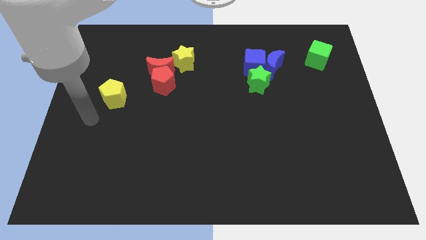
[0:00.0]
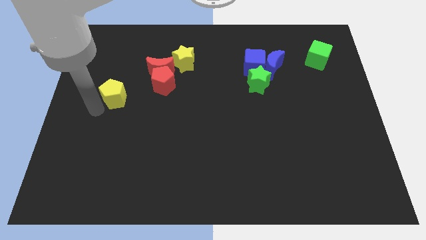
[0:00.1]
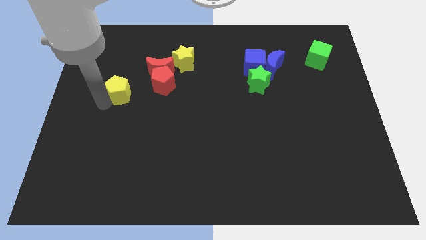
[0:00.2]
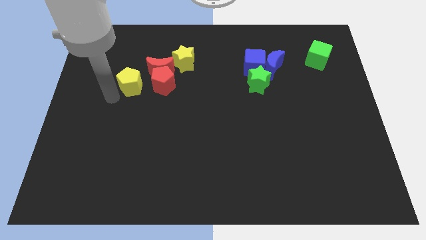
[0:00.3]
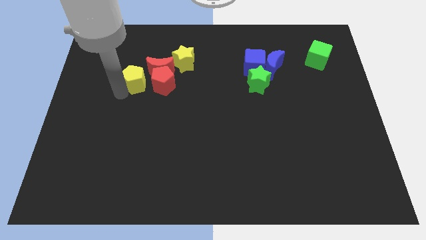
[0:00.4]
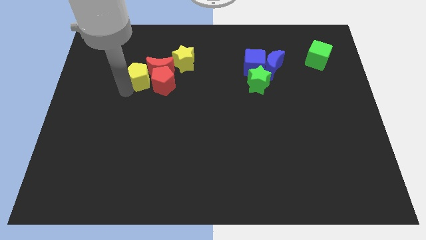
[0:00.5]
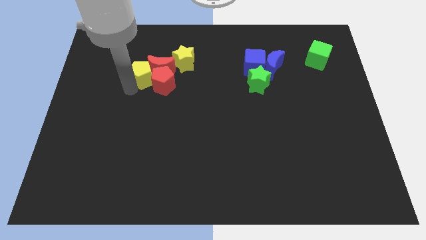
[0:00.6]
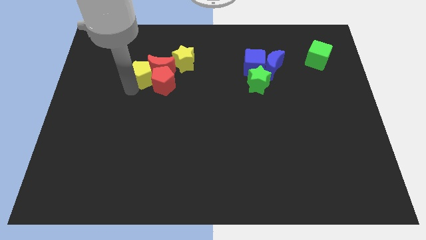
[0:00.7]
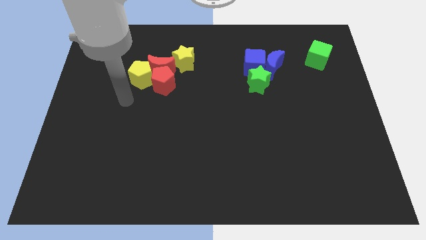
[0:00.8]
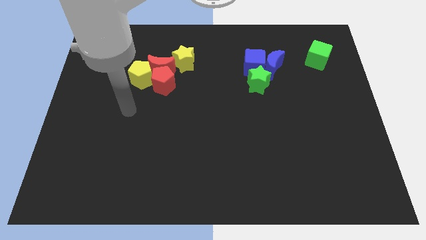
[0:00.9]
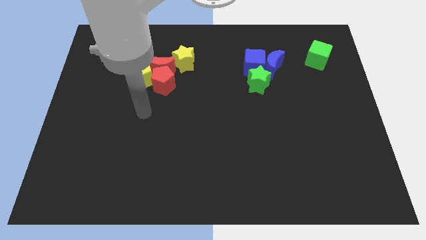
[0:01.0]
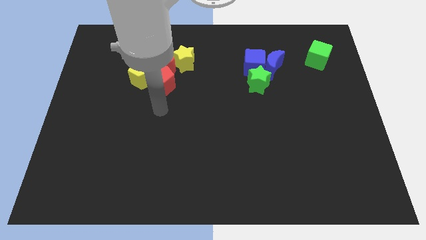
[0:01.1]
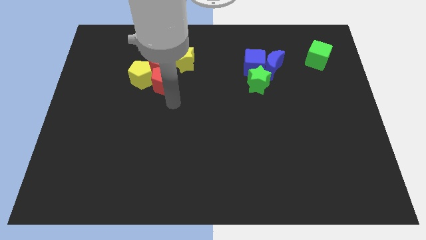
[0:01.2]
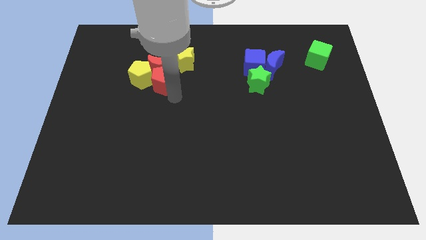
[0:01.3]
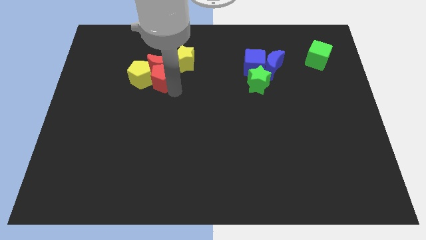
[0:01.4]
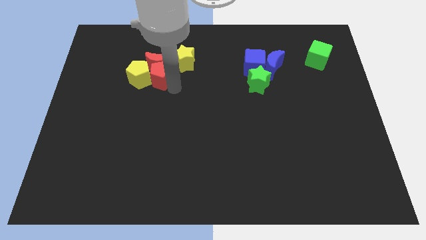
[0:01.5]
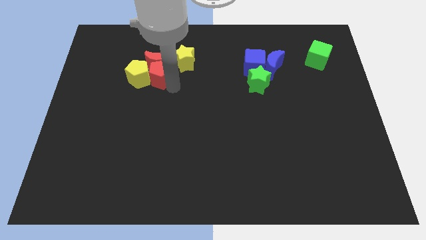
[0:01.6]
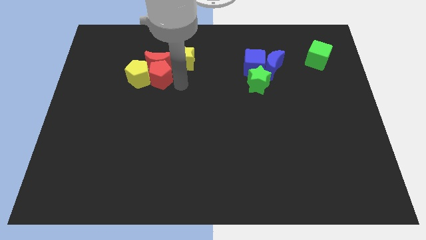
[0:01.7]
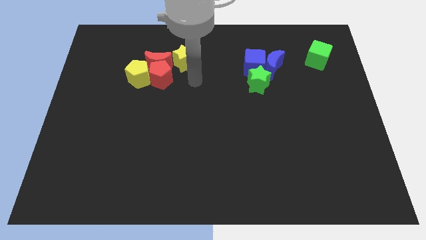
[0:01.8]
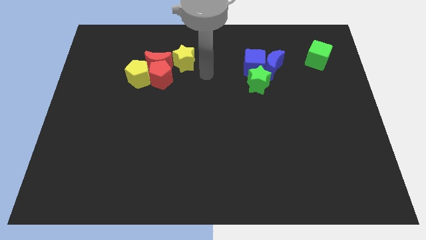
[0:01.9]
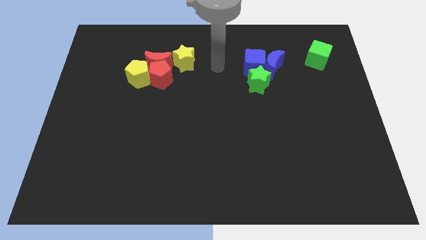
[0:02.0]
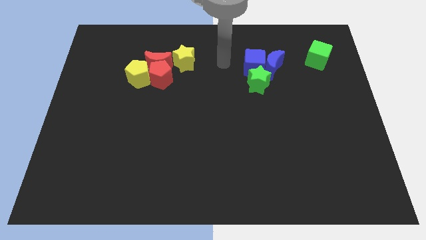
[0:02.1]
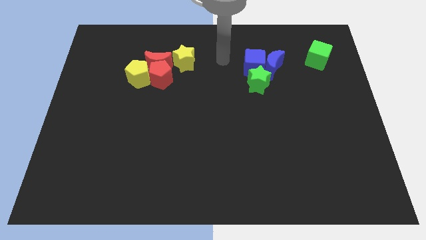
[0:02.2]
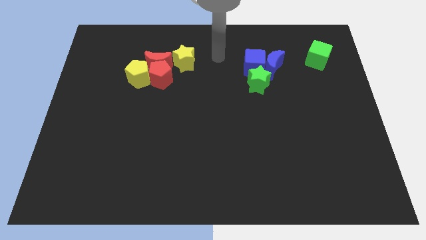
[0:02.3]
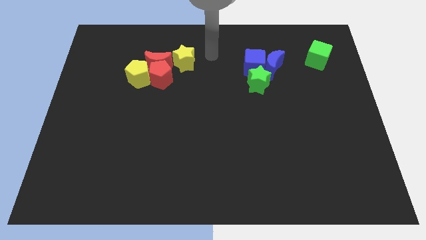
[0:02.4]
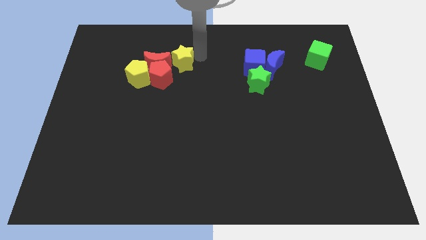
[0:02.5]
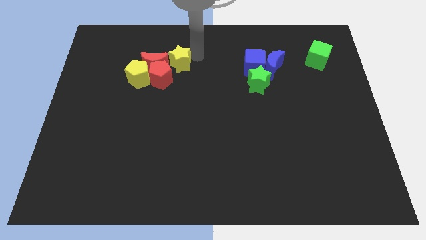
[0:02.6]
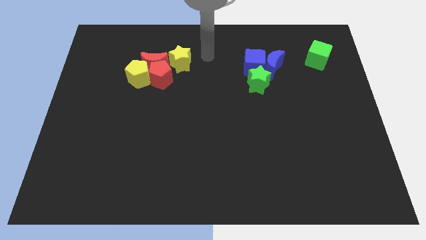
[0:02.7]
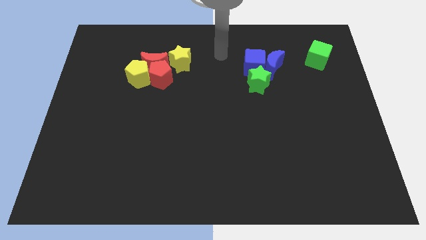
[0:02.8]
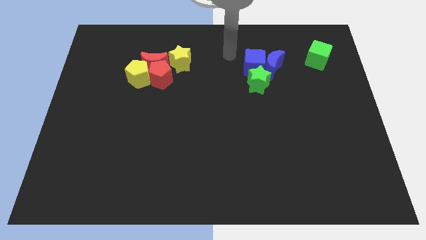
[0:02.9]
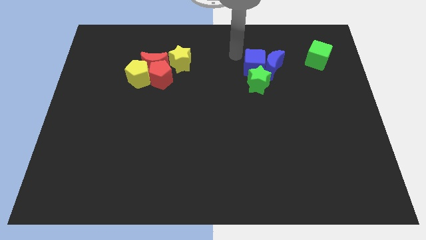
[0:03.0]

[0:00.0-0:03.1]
adjust the red and yellow blocks at the top left of the board

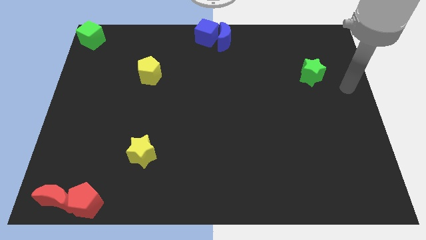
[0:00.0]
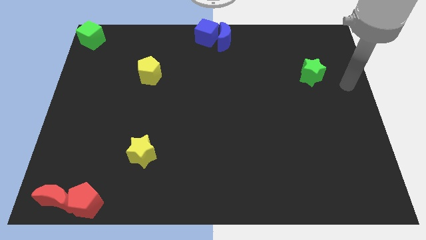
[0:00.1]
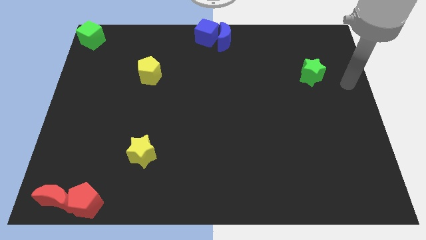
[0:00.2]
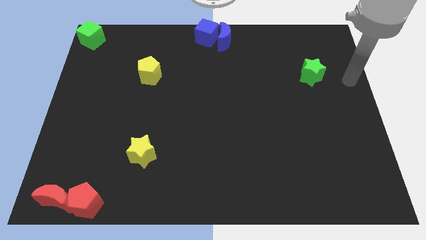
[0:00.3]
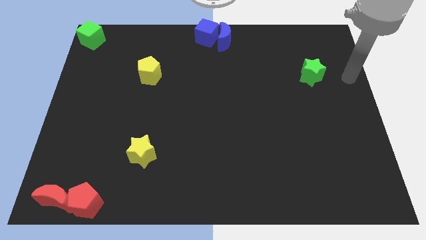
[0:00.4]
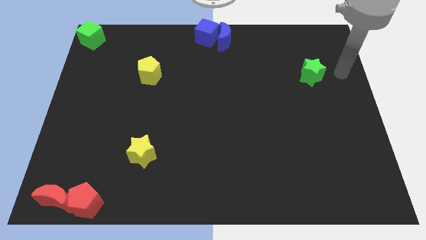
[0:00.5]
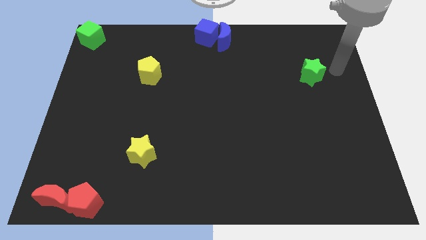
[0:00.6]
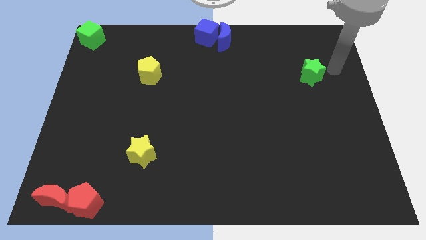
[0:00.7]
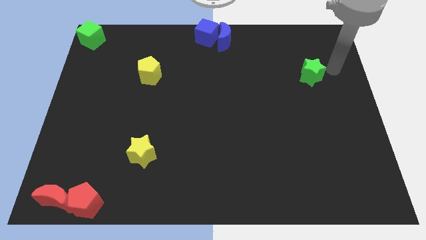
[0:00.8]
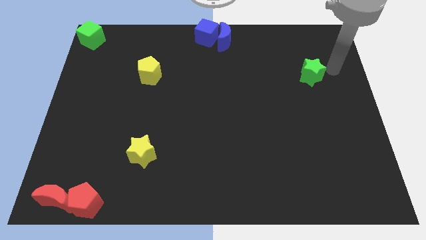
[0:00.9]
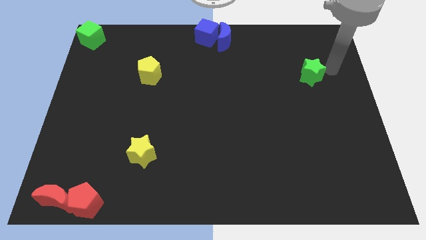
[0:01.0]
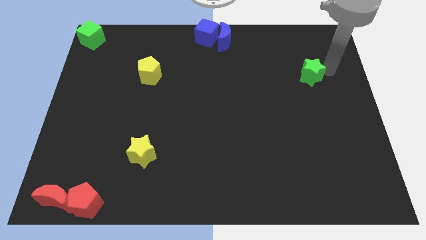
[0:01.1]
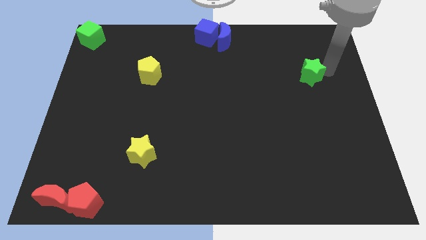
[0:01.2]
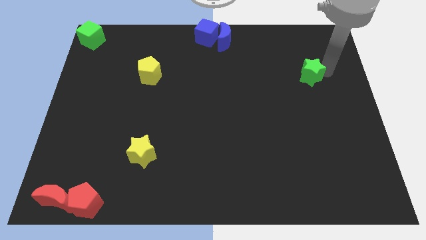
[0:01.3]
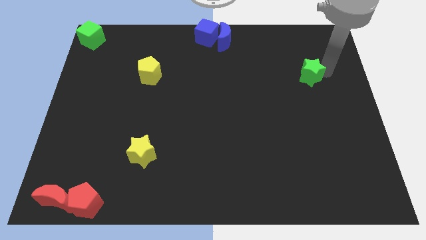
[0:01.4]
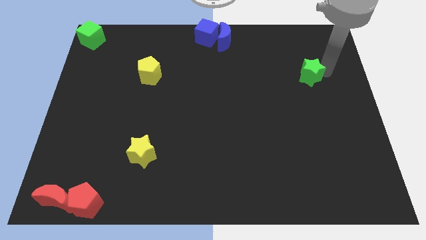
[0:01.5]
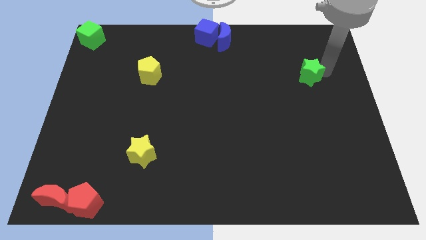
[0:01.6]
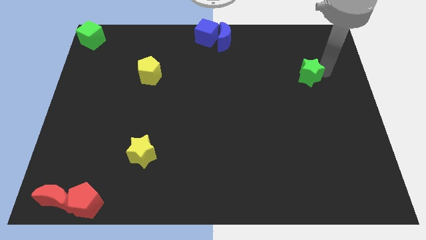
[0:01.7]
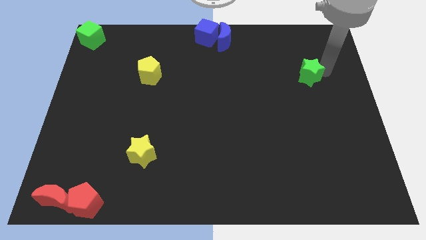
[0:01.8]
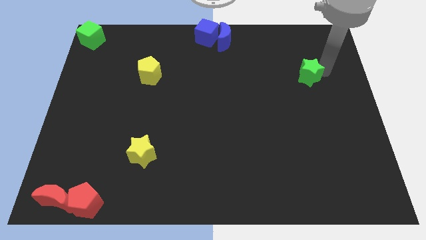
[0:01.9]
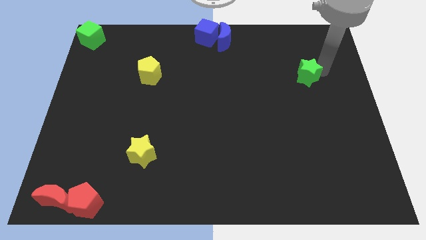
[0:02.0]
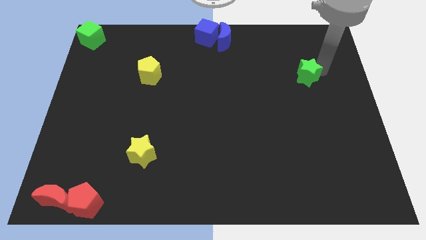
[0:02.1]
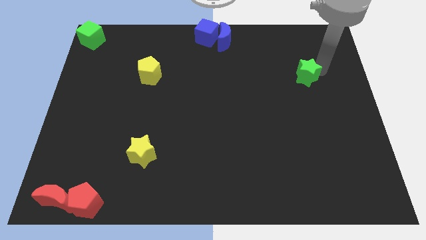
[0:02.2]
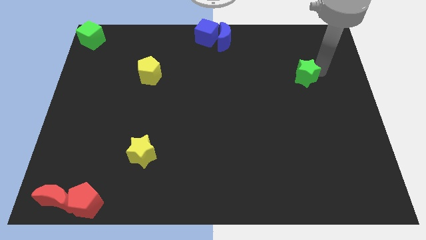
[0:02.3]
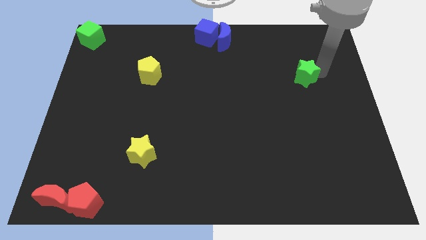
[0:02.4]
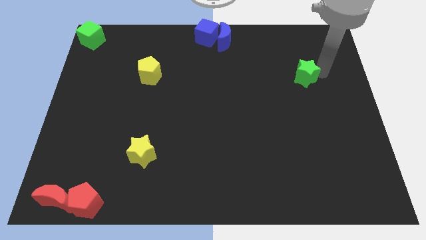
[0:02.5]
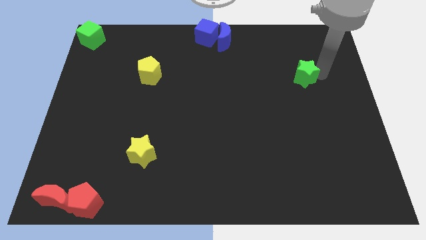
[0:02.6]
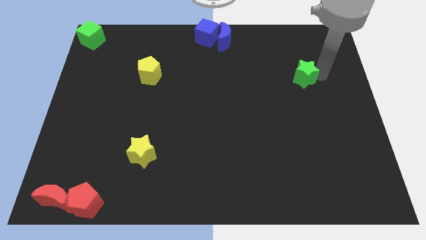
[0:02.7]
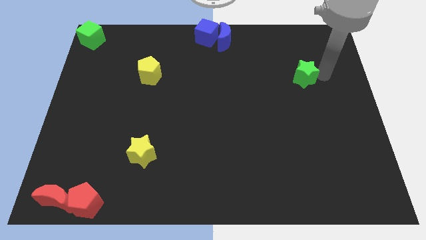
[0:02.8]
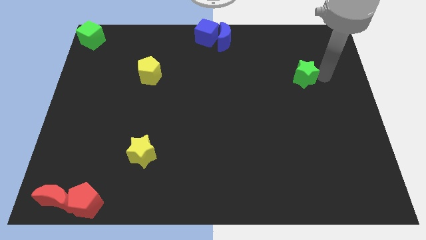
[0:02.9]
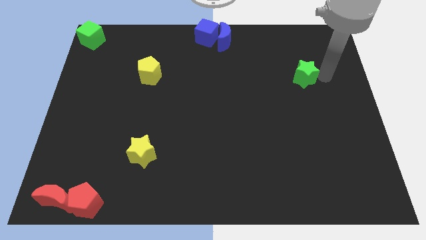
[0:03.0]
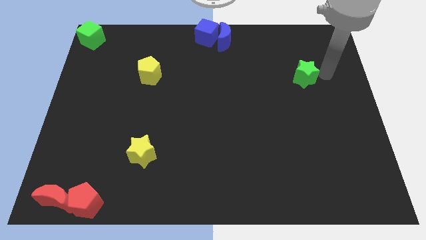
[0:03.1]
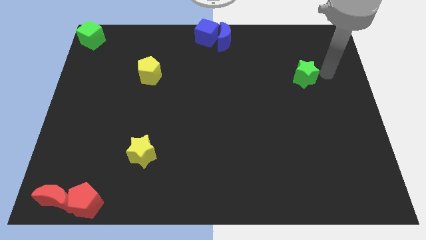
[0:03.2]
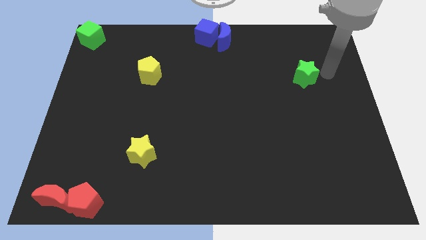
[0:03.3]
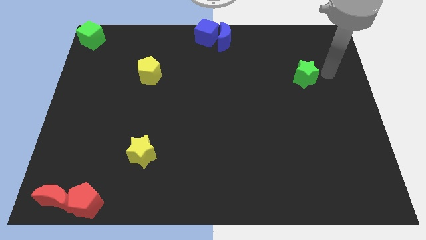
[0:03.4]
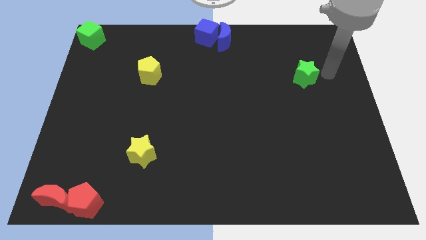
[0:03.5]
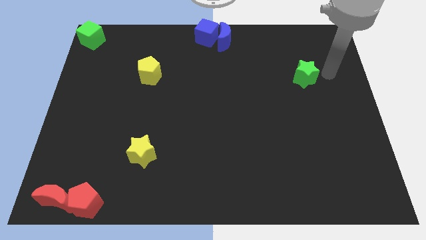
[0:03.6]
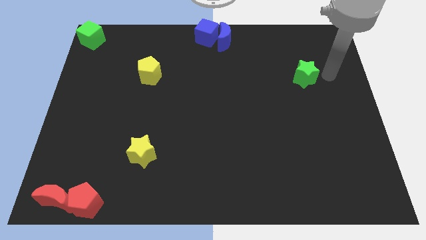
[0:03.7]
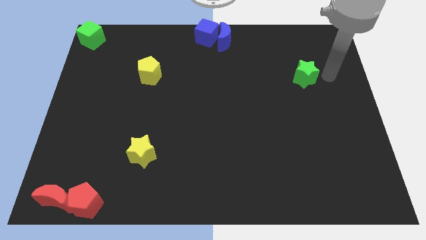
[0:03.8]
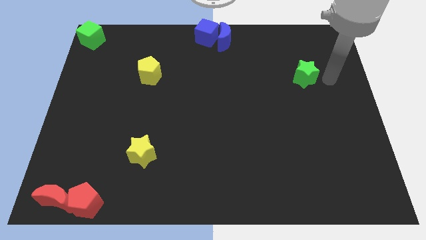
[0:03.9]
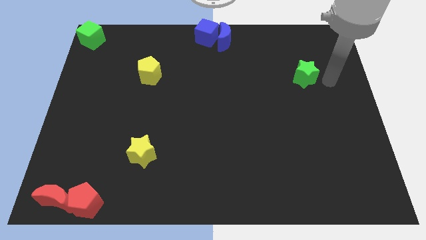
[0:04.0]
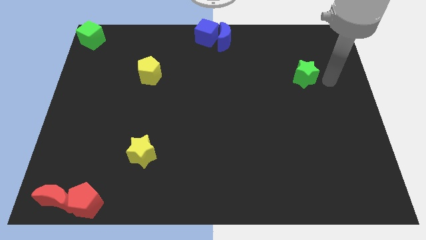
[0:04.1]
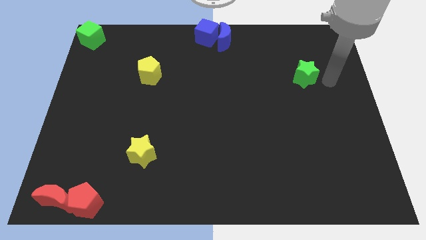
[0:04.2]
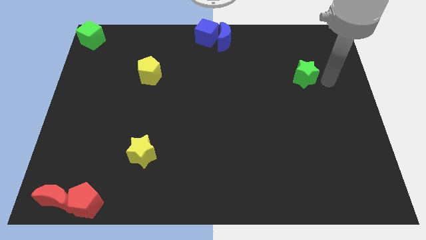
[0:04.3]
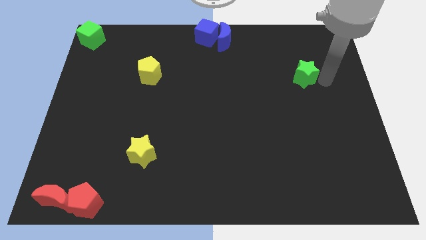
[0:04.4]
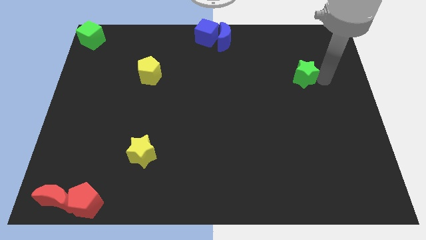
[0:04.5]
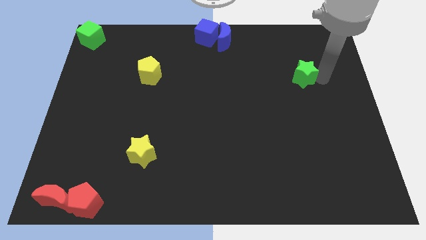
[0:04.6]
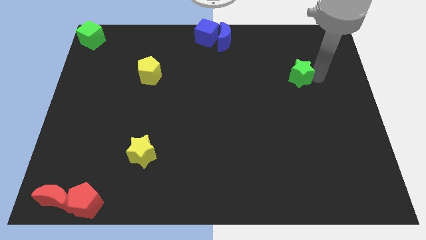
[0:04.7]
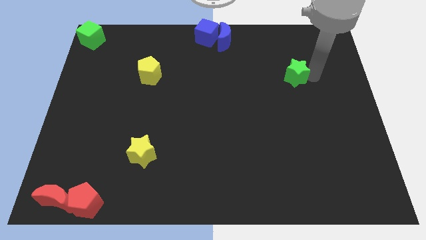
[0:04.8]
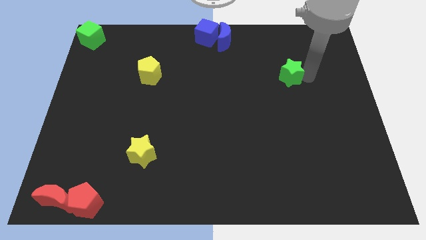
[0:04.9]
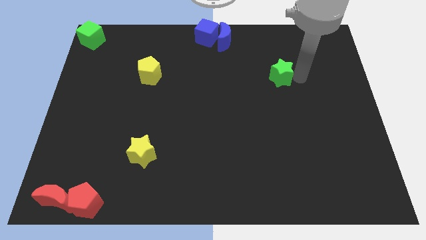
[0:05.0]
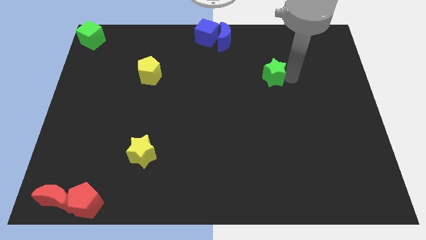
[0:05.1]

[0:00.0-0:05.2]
push green star towards the center of the board

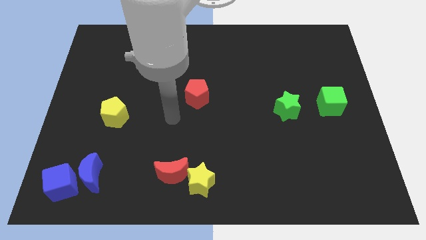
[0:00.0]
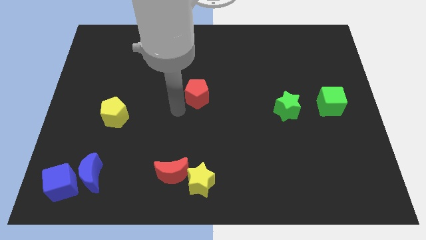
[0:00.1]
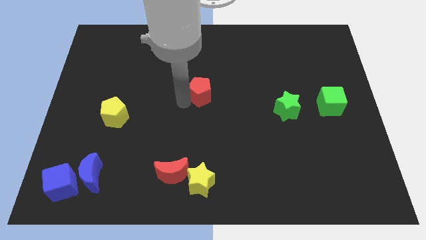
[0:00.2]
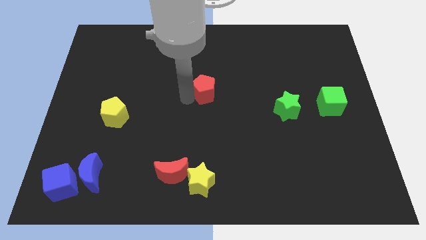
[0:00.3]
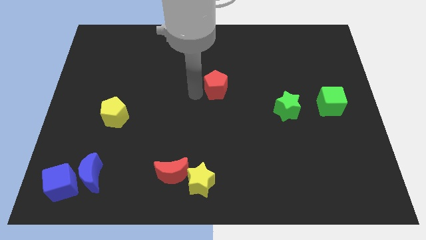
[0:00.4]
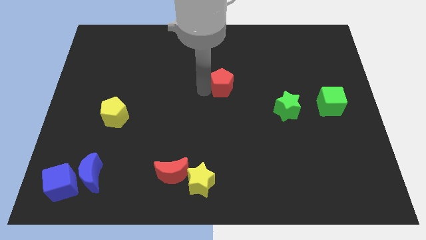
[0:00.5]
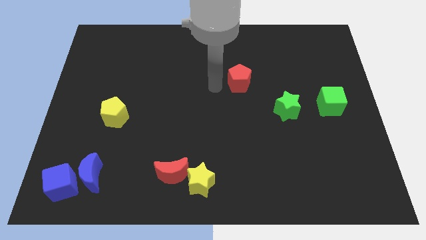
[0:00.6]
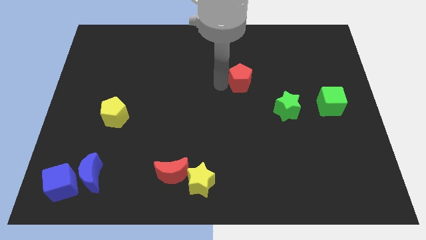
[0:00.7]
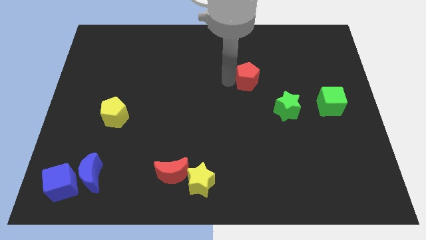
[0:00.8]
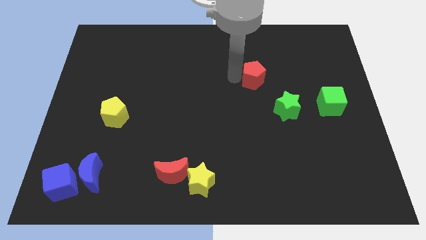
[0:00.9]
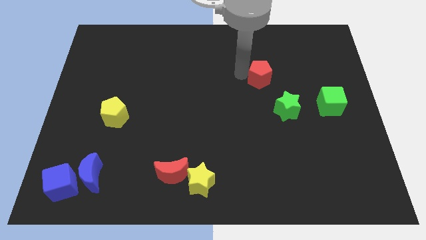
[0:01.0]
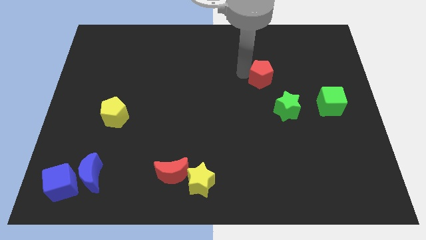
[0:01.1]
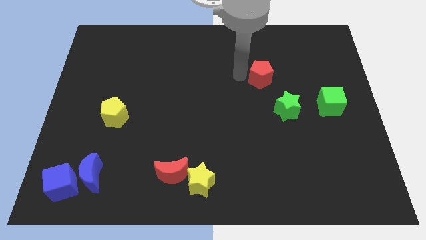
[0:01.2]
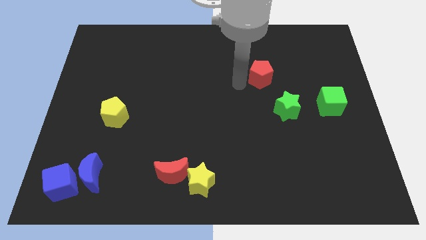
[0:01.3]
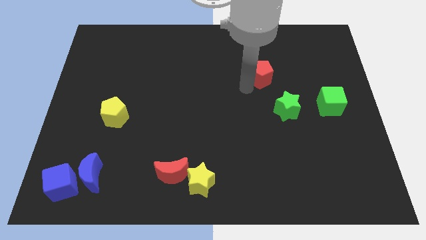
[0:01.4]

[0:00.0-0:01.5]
push the red pentagon towards the right side of the board
